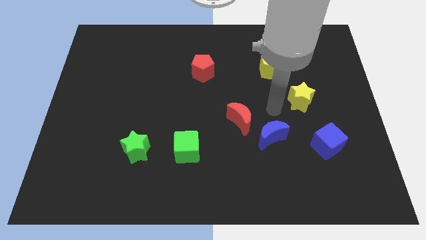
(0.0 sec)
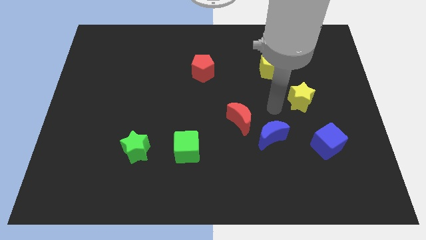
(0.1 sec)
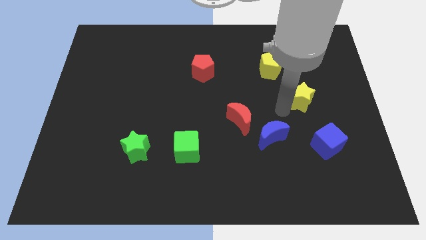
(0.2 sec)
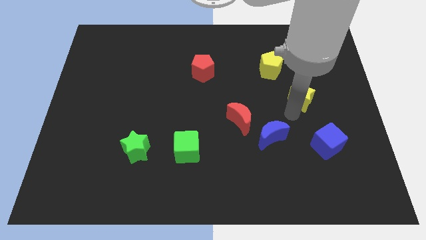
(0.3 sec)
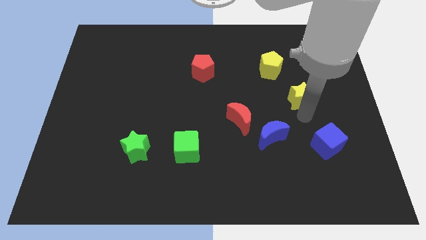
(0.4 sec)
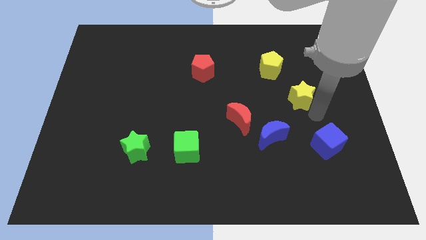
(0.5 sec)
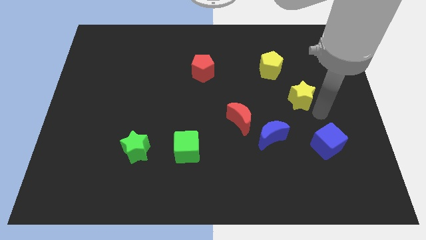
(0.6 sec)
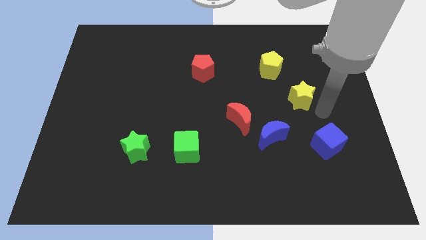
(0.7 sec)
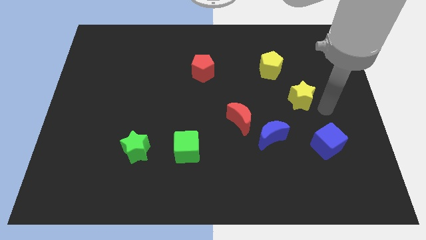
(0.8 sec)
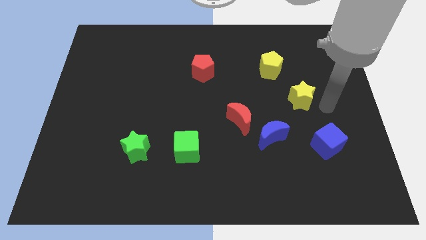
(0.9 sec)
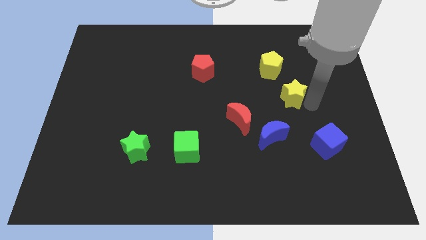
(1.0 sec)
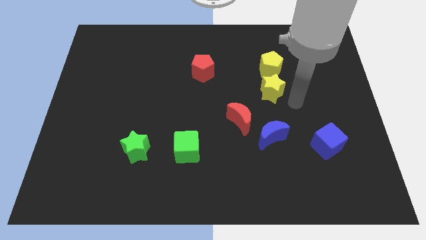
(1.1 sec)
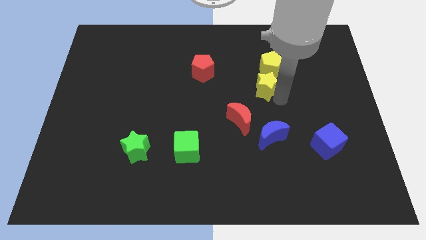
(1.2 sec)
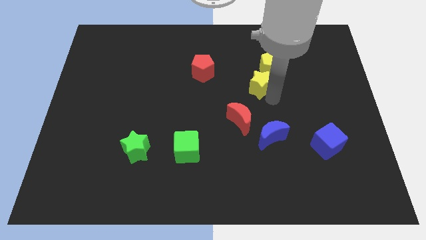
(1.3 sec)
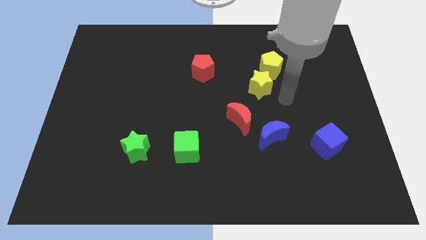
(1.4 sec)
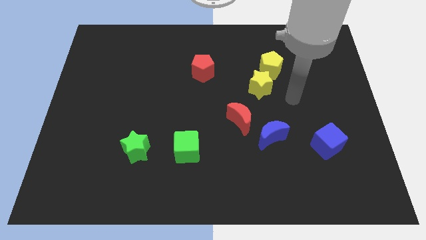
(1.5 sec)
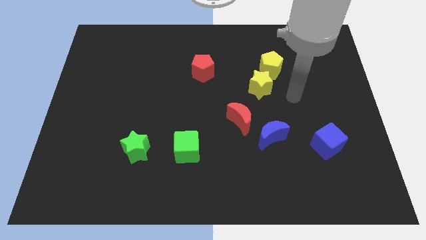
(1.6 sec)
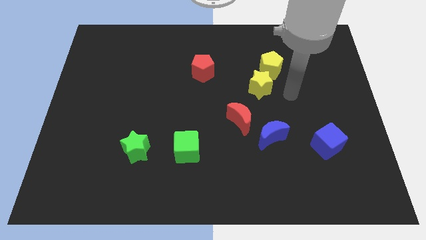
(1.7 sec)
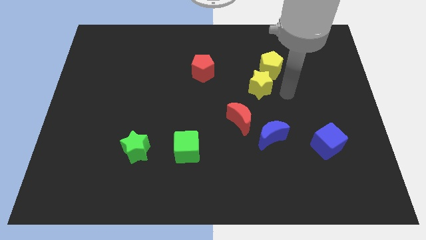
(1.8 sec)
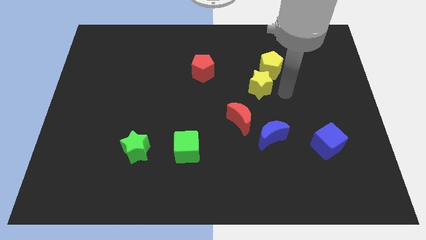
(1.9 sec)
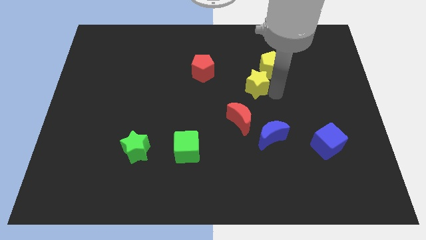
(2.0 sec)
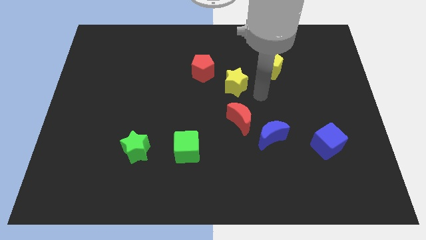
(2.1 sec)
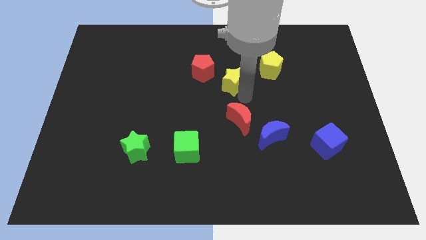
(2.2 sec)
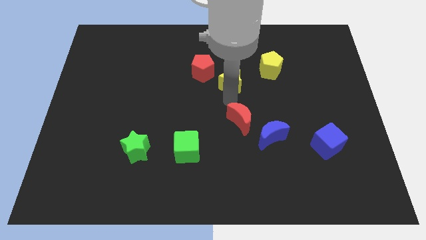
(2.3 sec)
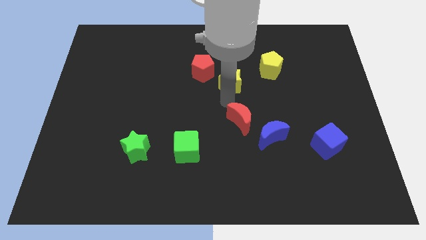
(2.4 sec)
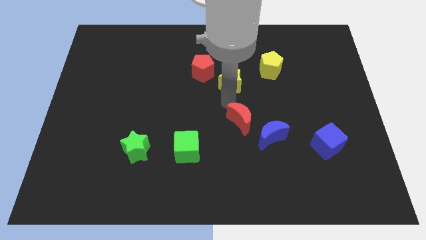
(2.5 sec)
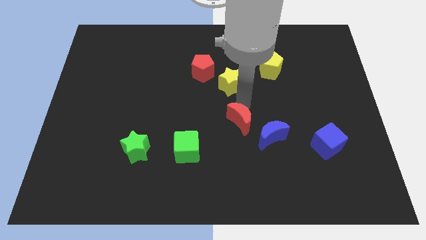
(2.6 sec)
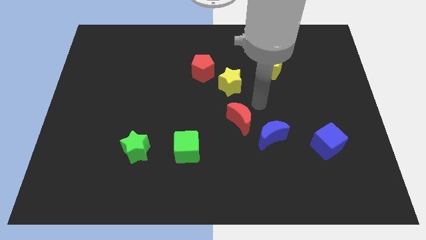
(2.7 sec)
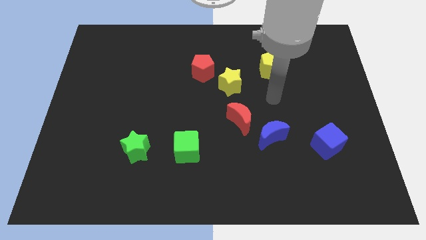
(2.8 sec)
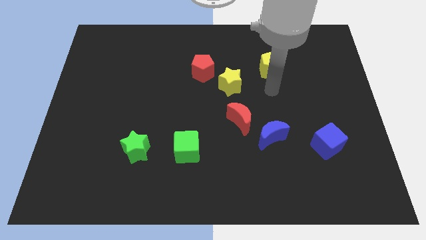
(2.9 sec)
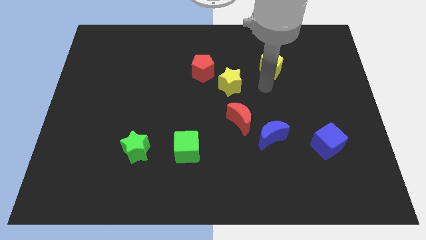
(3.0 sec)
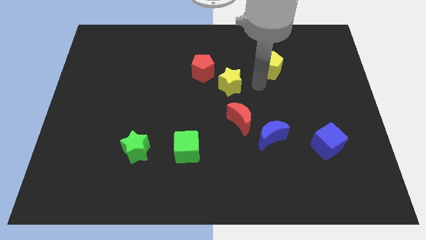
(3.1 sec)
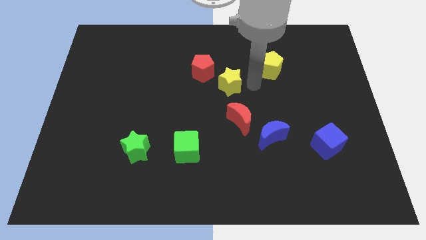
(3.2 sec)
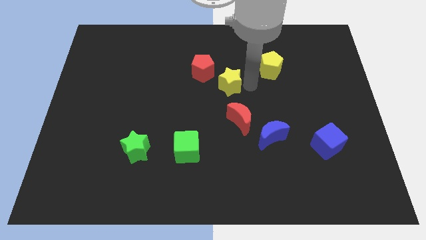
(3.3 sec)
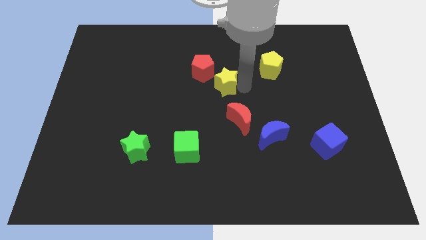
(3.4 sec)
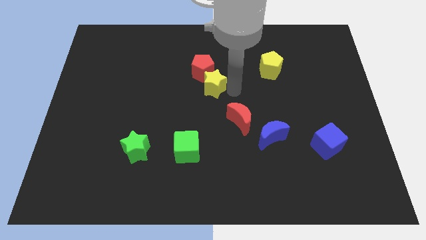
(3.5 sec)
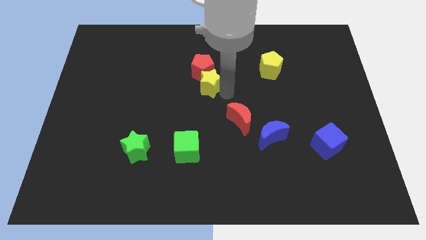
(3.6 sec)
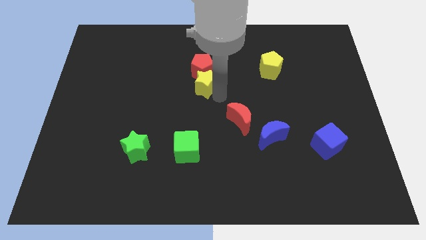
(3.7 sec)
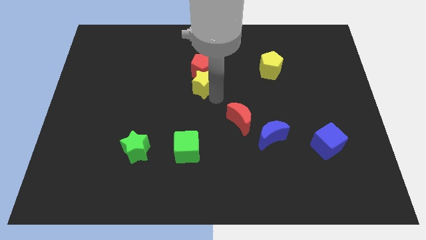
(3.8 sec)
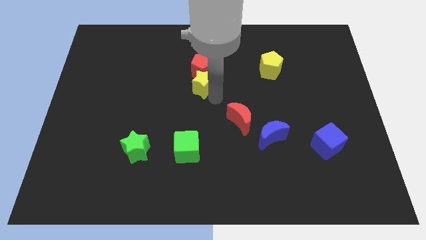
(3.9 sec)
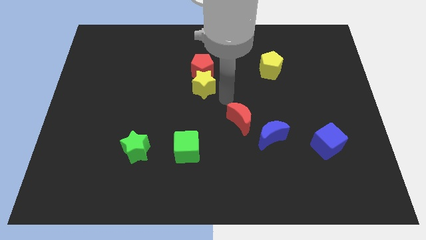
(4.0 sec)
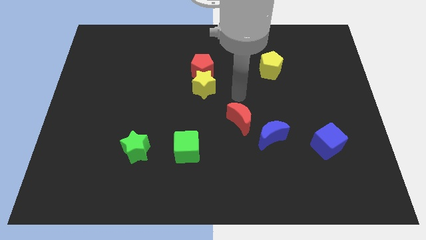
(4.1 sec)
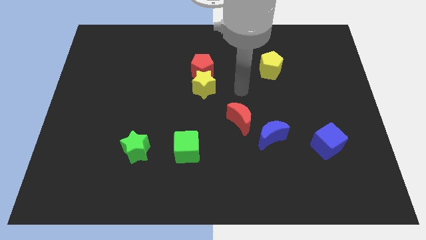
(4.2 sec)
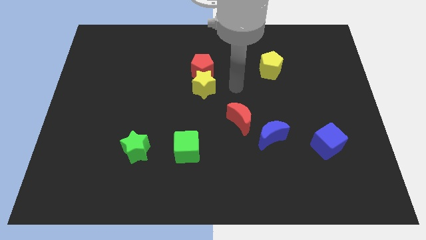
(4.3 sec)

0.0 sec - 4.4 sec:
move the yellow star to the bottom of the red pentagon

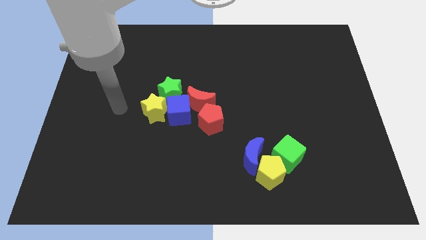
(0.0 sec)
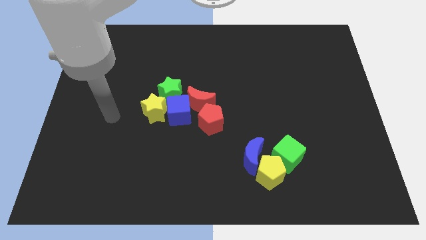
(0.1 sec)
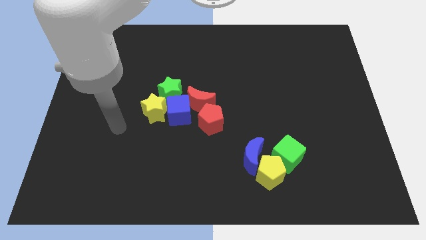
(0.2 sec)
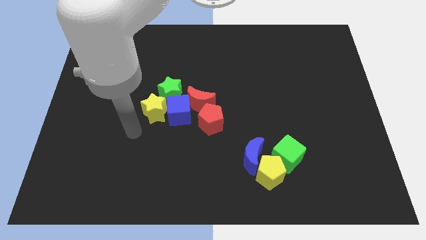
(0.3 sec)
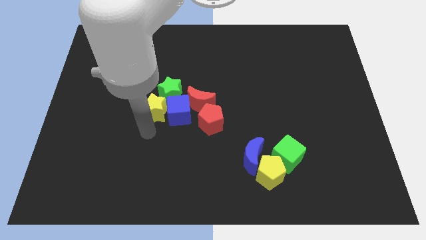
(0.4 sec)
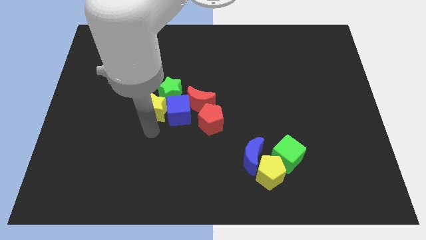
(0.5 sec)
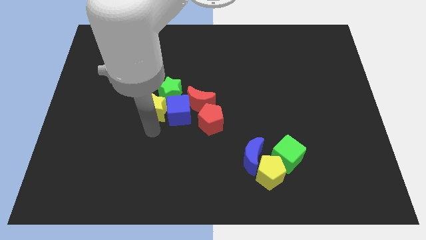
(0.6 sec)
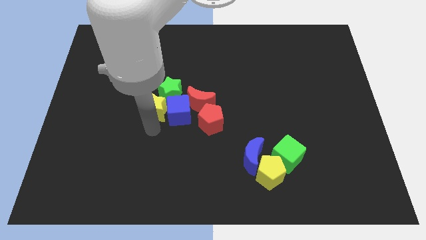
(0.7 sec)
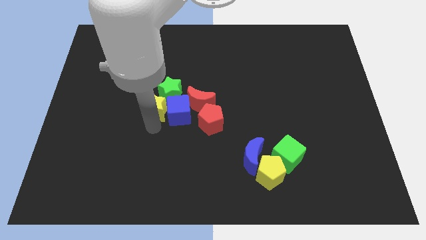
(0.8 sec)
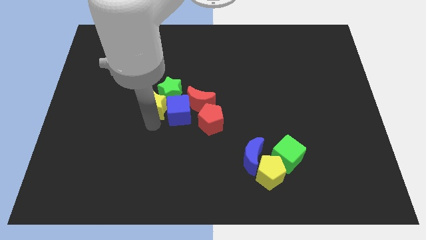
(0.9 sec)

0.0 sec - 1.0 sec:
place the arm below the yellow star

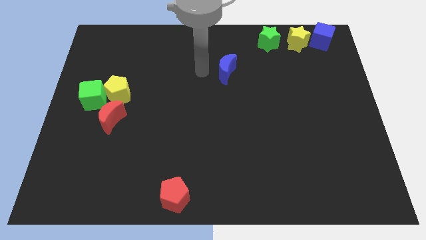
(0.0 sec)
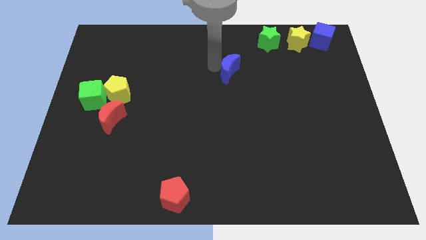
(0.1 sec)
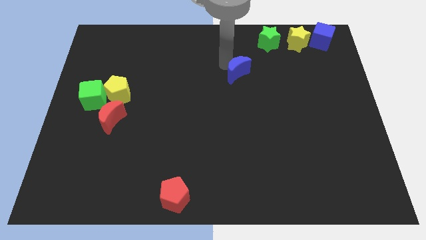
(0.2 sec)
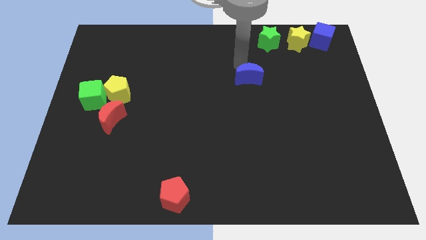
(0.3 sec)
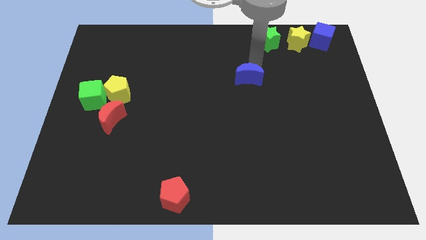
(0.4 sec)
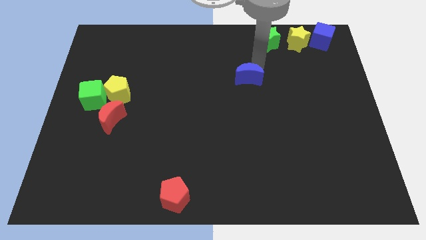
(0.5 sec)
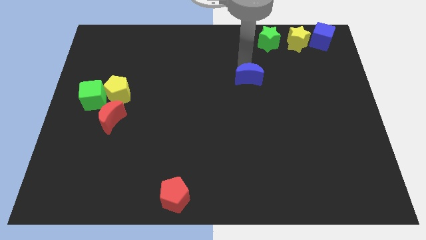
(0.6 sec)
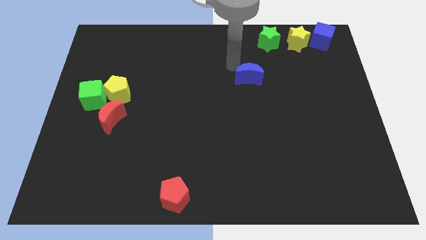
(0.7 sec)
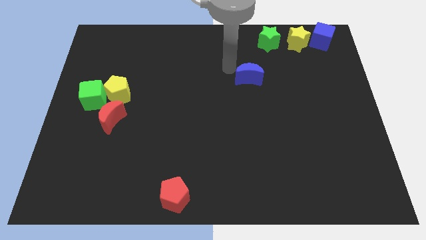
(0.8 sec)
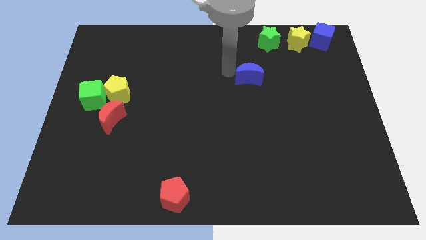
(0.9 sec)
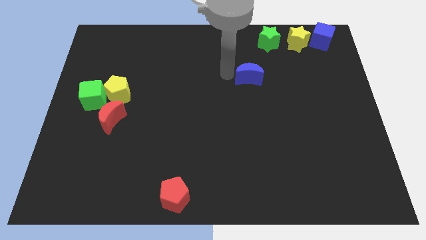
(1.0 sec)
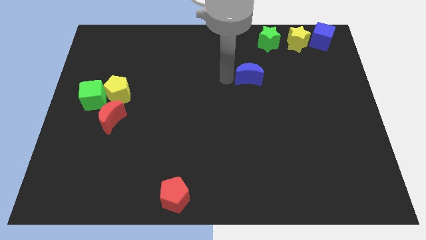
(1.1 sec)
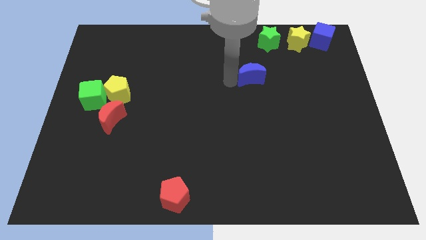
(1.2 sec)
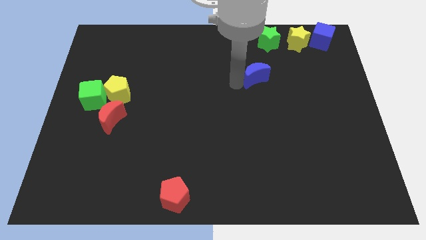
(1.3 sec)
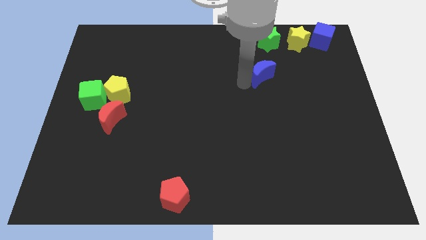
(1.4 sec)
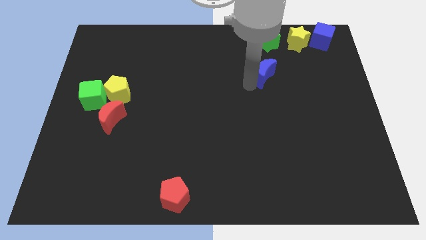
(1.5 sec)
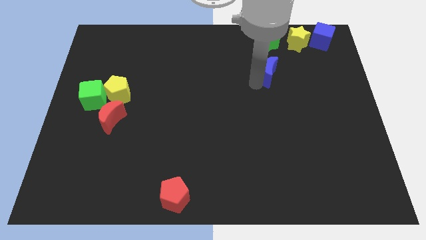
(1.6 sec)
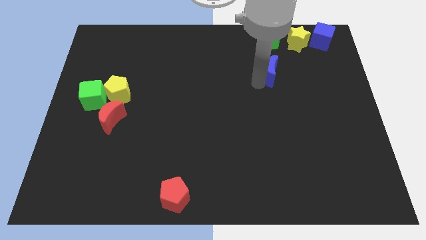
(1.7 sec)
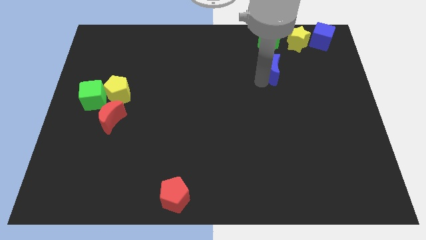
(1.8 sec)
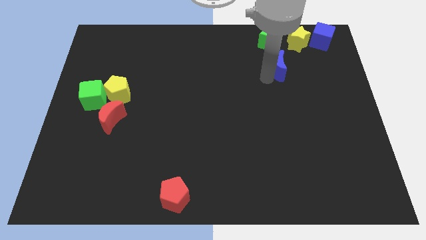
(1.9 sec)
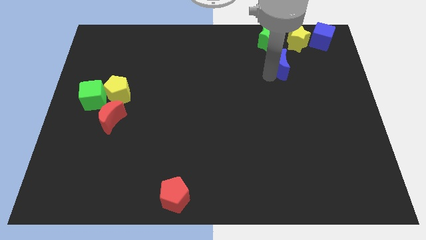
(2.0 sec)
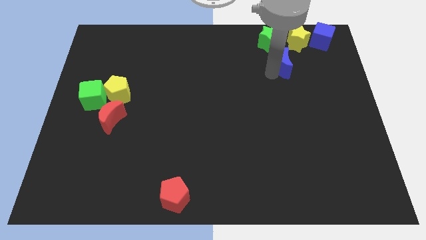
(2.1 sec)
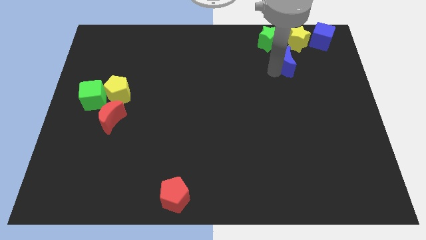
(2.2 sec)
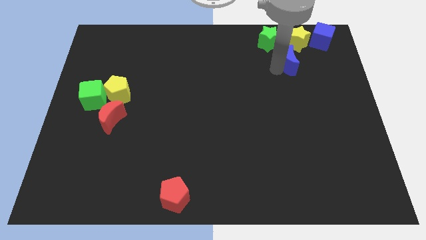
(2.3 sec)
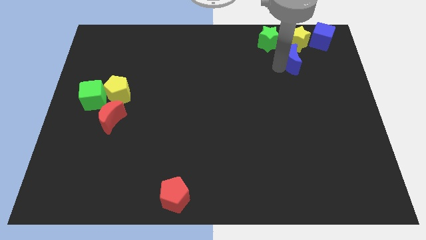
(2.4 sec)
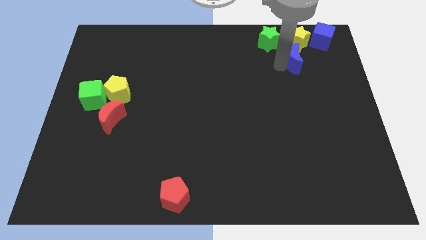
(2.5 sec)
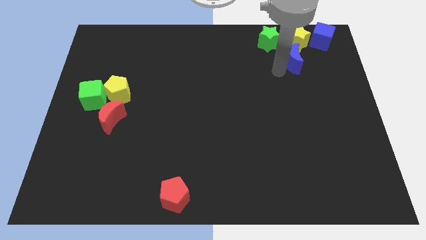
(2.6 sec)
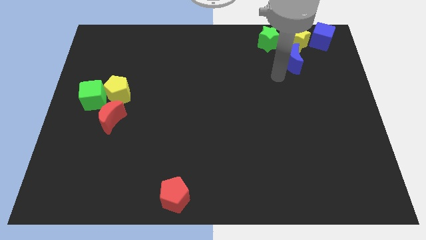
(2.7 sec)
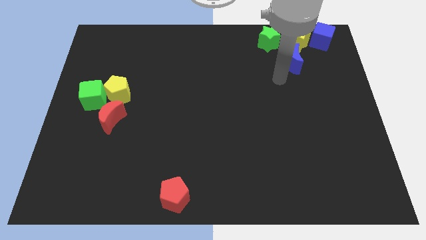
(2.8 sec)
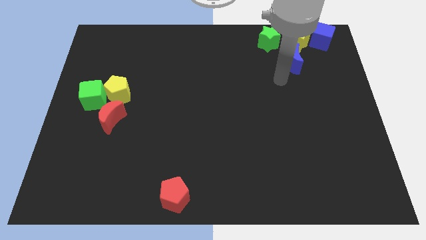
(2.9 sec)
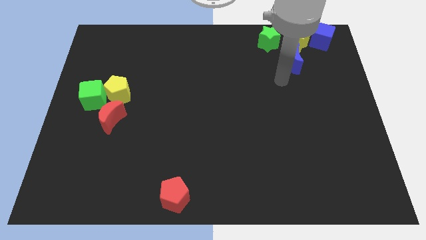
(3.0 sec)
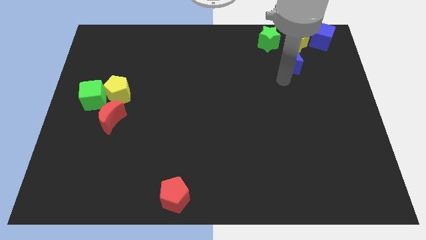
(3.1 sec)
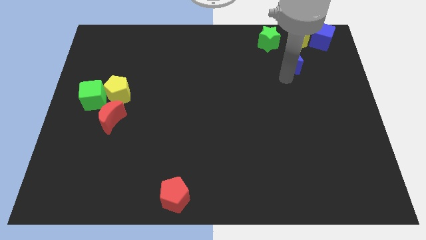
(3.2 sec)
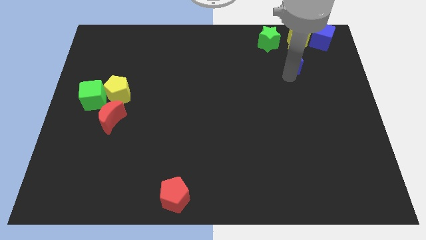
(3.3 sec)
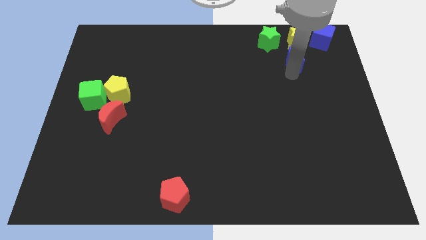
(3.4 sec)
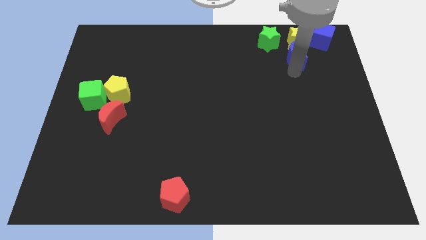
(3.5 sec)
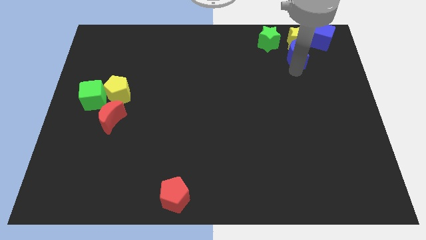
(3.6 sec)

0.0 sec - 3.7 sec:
move the blue moon to the bottom of the yellow star
